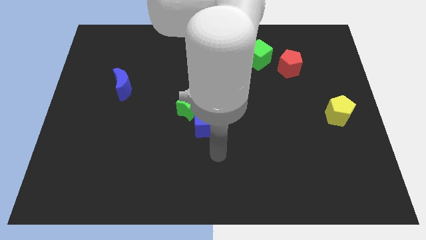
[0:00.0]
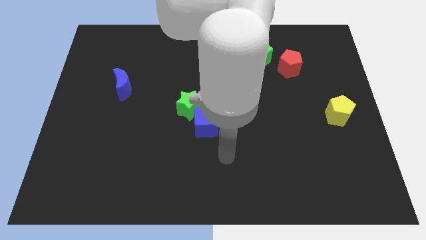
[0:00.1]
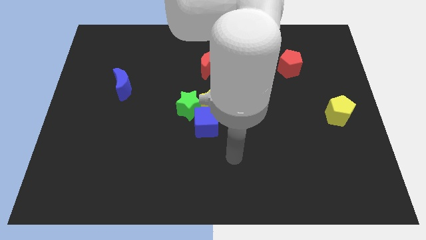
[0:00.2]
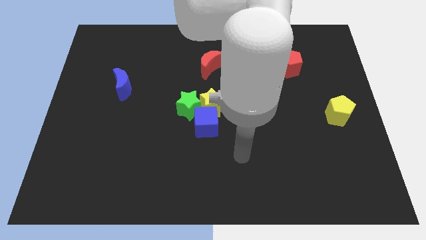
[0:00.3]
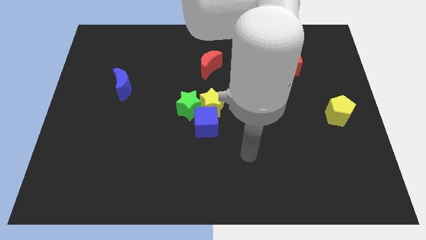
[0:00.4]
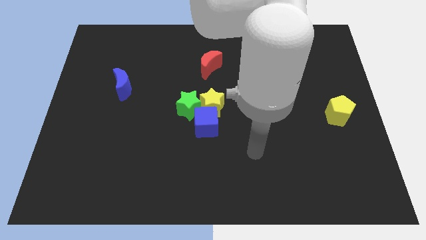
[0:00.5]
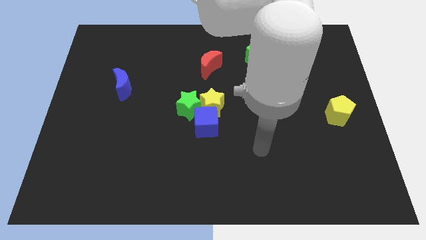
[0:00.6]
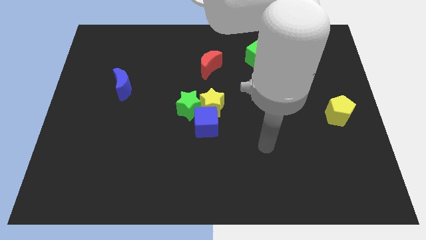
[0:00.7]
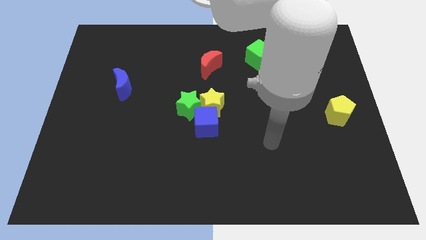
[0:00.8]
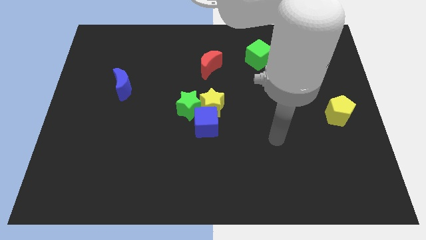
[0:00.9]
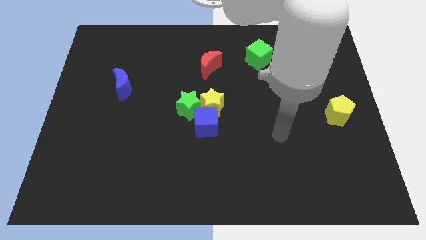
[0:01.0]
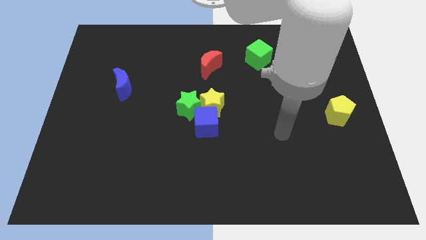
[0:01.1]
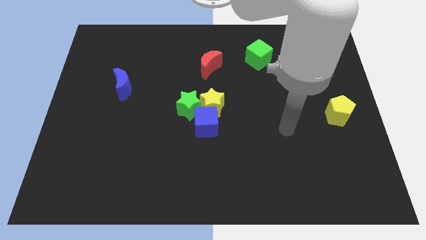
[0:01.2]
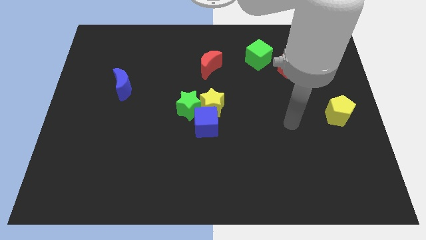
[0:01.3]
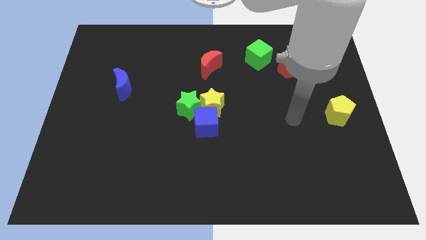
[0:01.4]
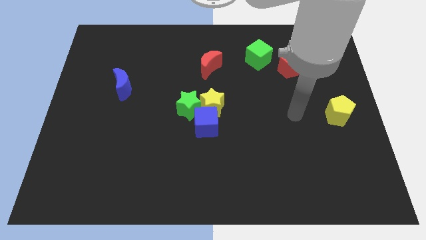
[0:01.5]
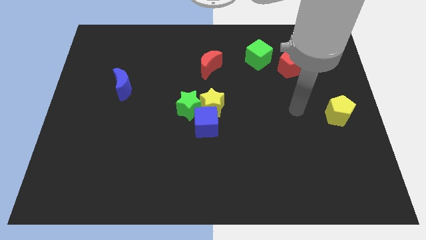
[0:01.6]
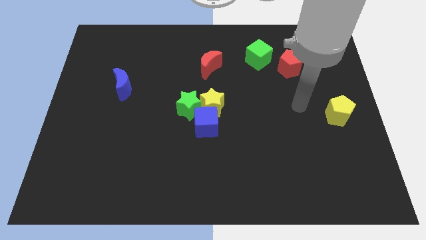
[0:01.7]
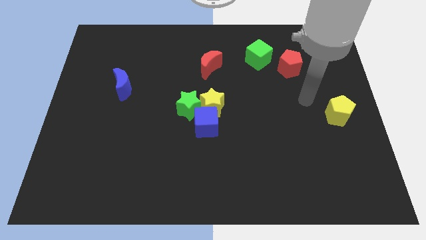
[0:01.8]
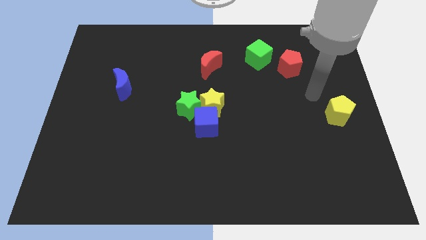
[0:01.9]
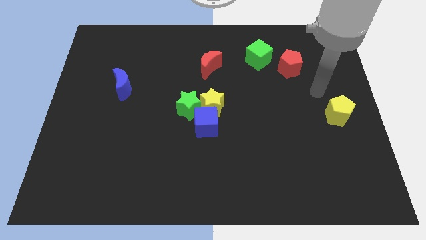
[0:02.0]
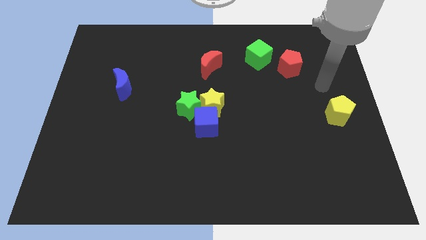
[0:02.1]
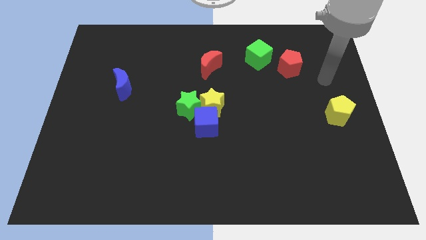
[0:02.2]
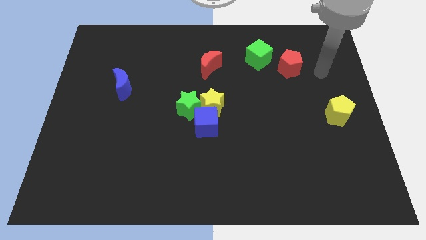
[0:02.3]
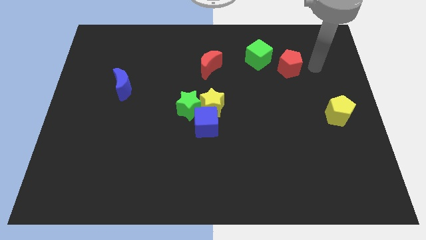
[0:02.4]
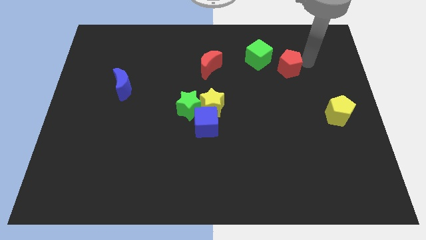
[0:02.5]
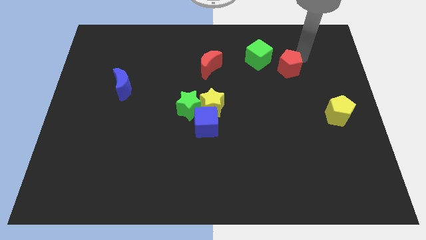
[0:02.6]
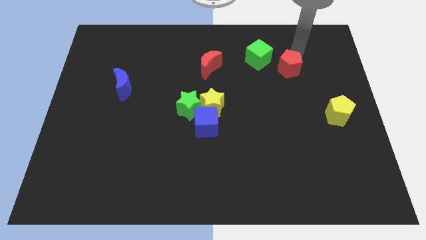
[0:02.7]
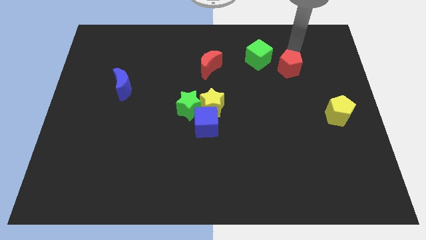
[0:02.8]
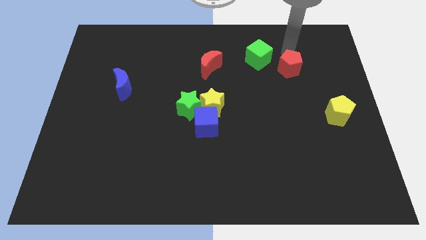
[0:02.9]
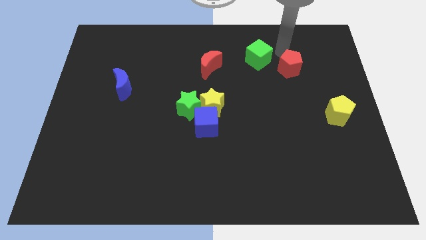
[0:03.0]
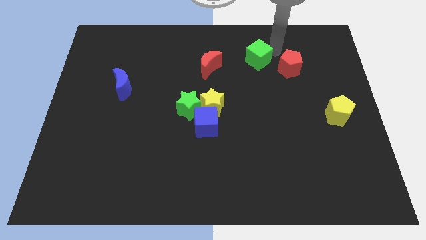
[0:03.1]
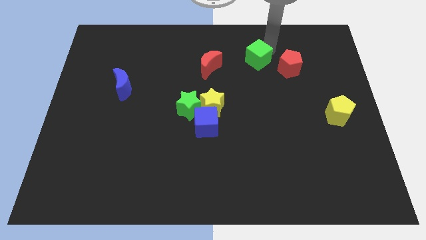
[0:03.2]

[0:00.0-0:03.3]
move your arm to the top right of the green cube

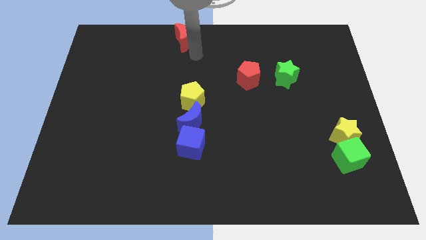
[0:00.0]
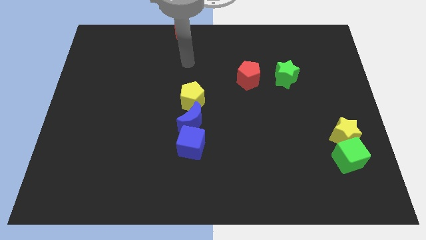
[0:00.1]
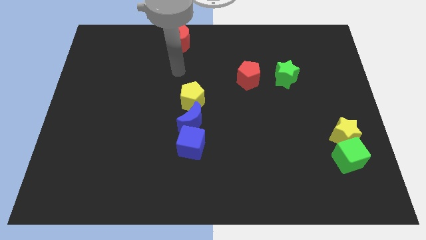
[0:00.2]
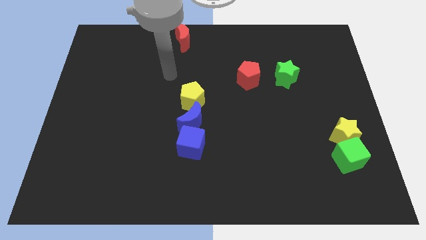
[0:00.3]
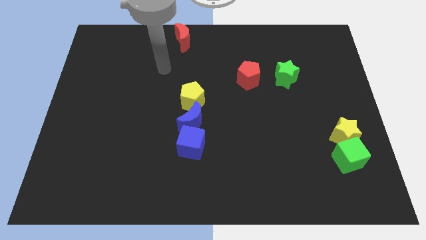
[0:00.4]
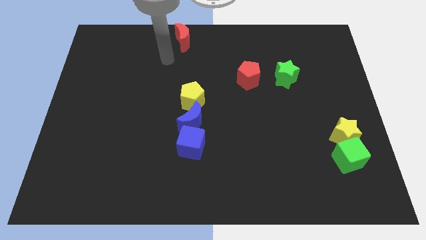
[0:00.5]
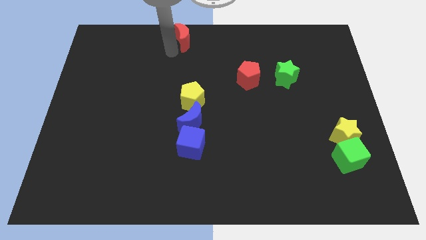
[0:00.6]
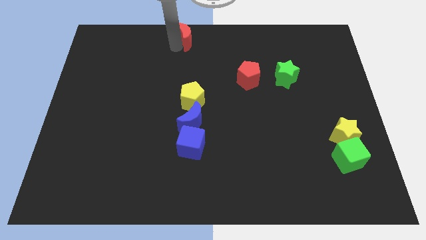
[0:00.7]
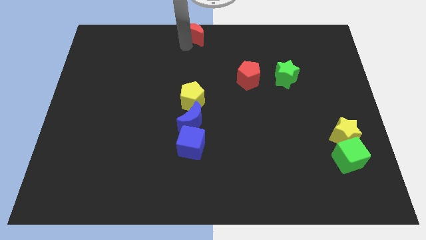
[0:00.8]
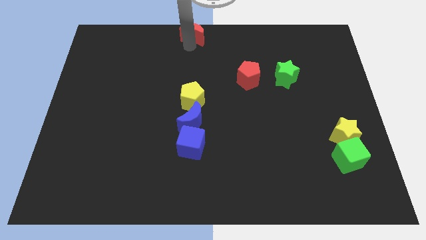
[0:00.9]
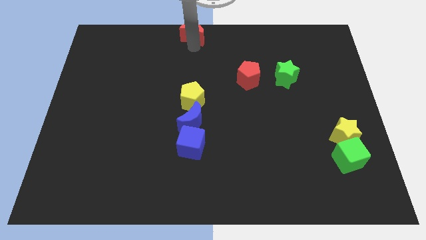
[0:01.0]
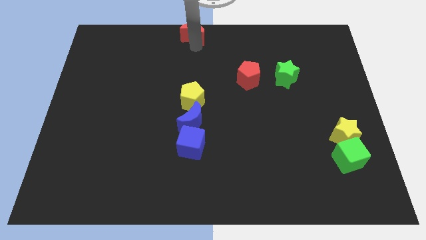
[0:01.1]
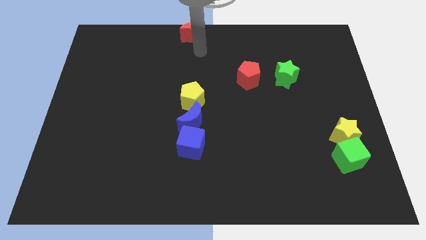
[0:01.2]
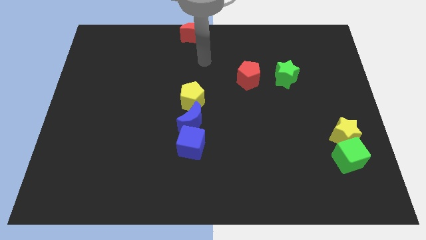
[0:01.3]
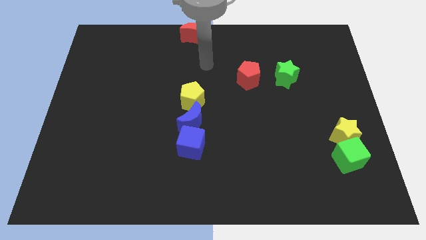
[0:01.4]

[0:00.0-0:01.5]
move the red crescent to the top center

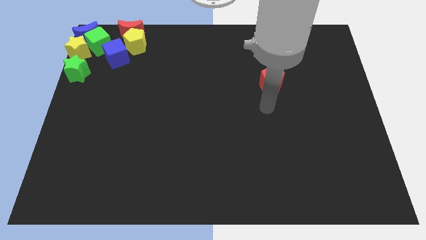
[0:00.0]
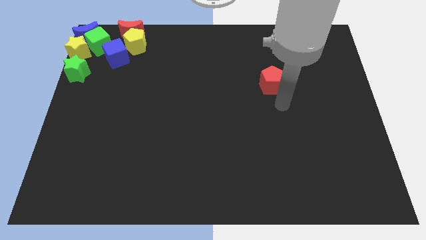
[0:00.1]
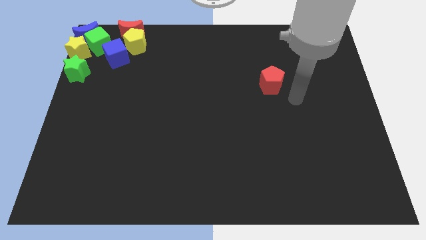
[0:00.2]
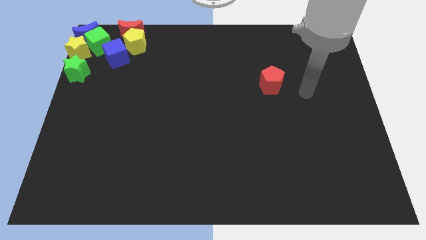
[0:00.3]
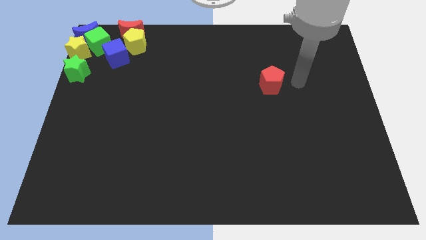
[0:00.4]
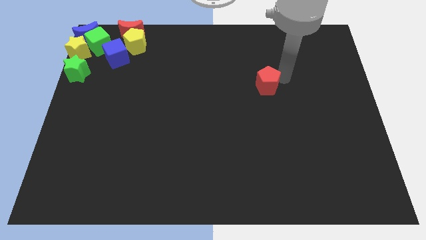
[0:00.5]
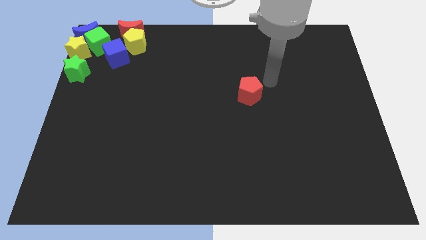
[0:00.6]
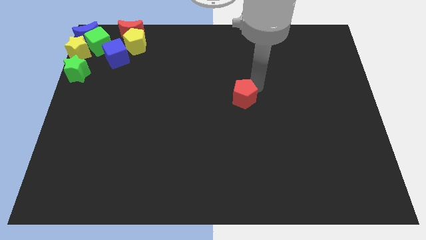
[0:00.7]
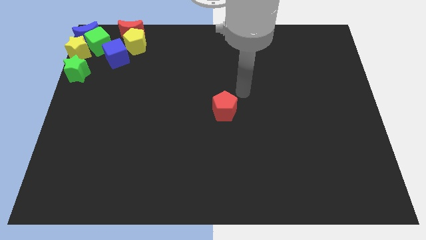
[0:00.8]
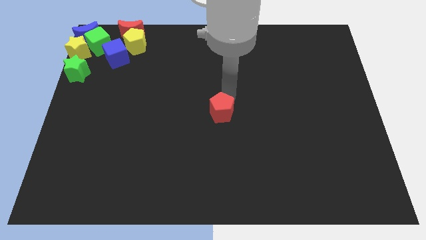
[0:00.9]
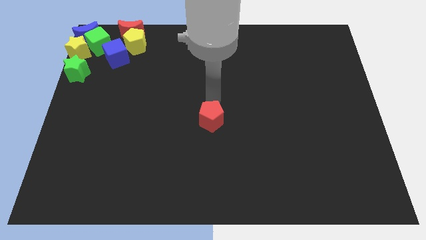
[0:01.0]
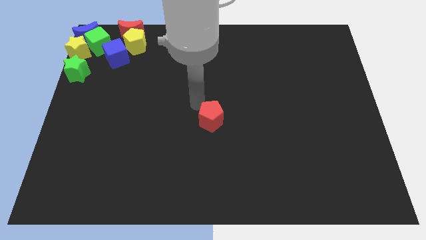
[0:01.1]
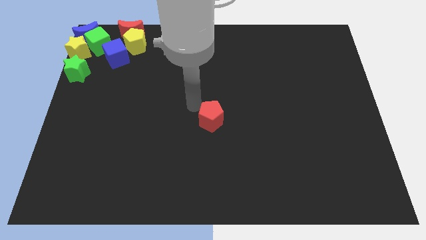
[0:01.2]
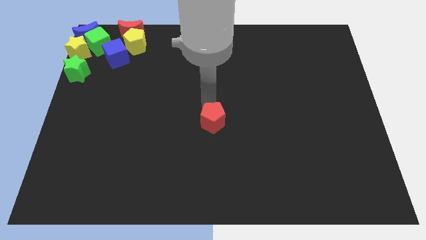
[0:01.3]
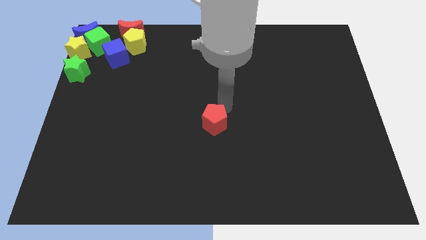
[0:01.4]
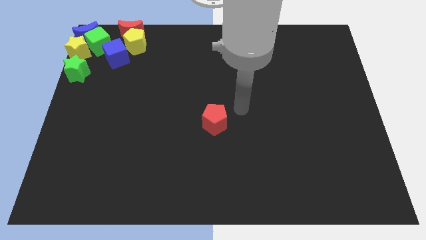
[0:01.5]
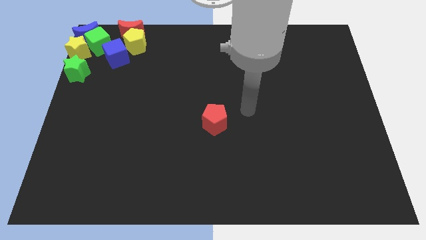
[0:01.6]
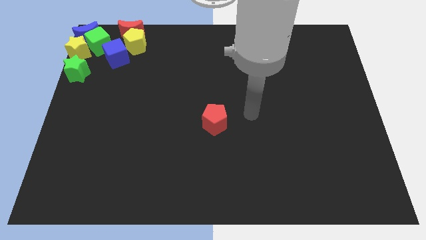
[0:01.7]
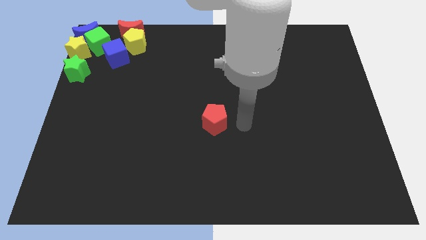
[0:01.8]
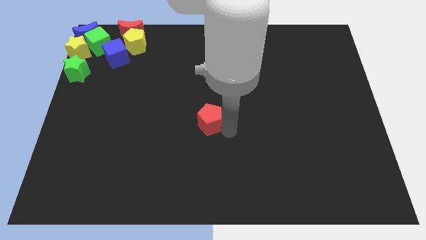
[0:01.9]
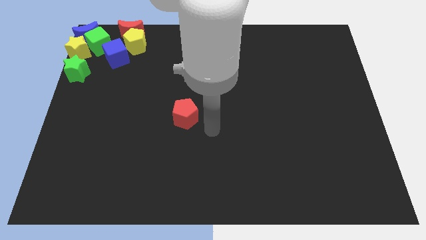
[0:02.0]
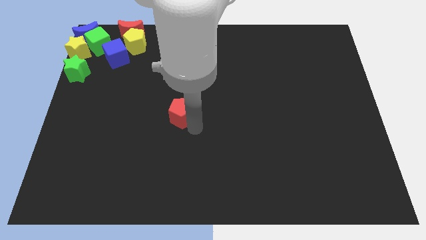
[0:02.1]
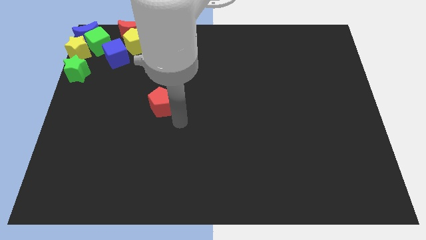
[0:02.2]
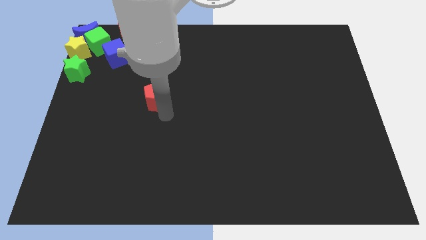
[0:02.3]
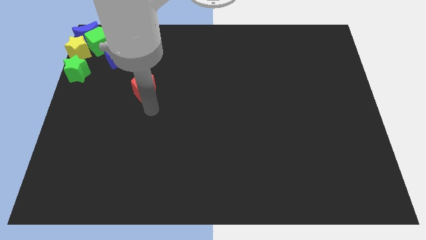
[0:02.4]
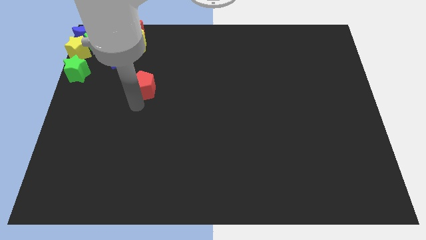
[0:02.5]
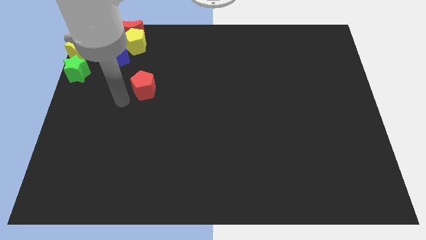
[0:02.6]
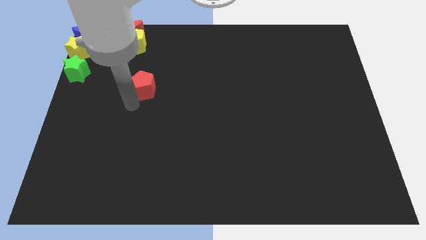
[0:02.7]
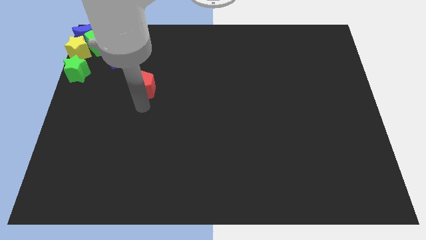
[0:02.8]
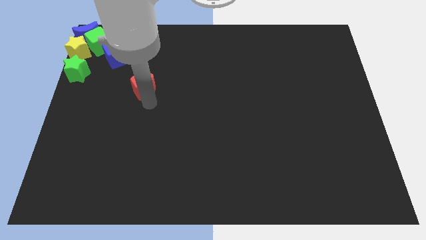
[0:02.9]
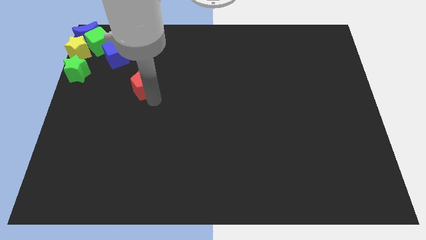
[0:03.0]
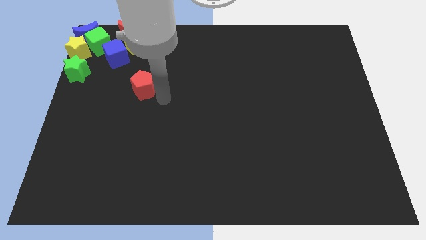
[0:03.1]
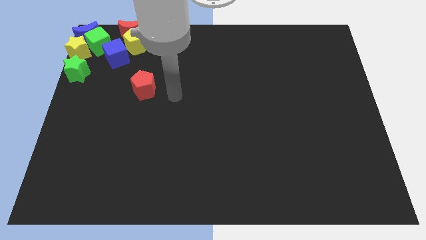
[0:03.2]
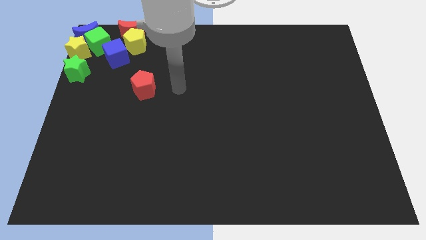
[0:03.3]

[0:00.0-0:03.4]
push the red pentagon parallel bottom right to the blue cube

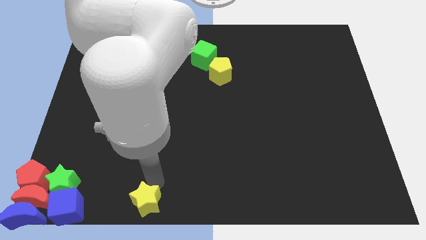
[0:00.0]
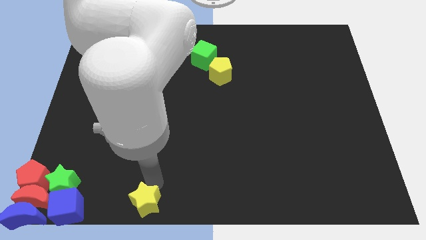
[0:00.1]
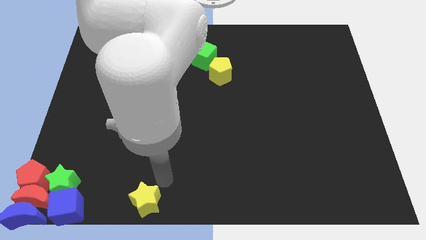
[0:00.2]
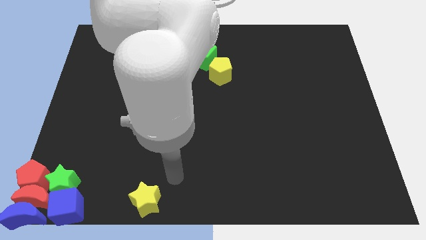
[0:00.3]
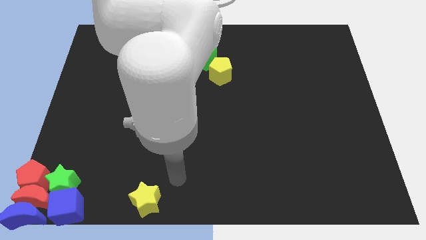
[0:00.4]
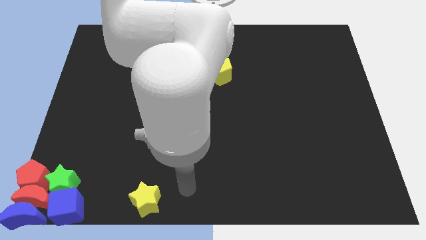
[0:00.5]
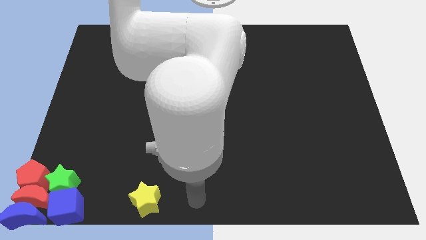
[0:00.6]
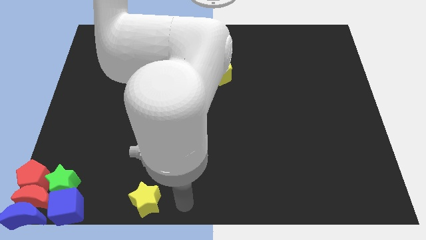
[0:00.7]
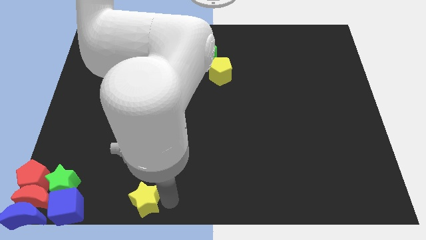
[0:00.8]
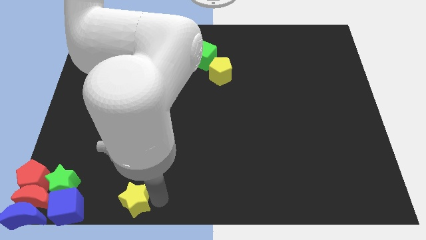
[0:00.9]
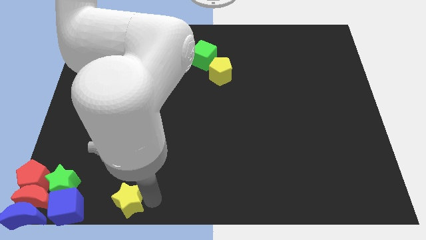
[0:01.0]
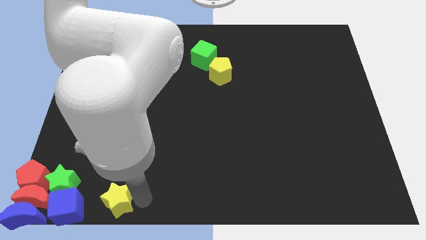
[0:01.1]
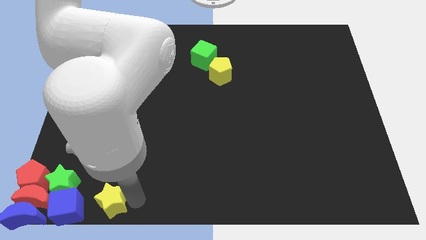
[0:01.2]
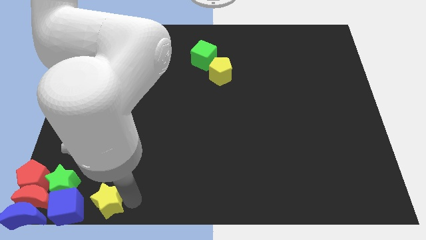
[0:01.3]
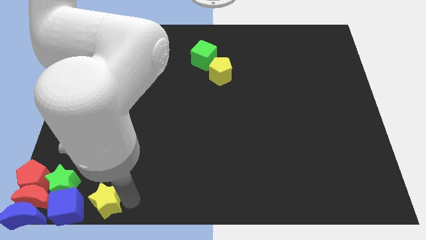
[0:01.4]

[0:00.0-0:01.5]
move the yellow star to the right of the blue cube to the bottom left of the board
